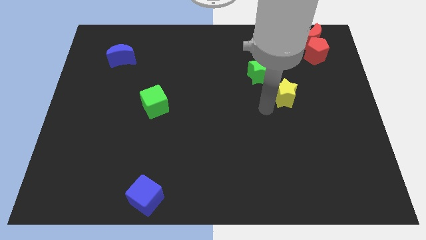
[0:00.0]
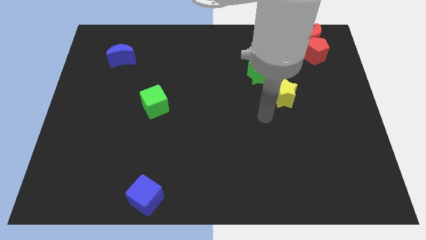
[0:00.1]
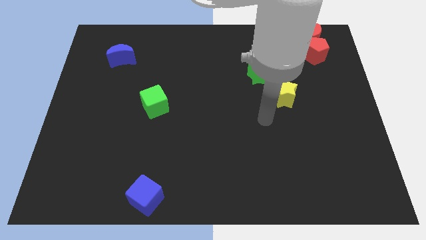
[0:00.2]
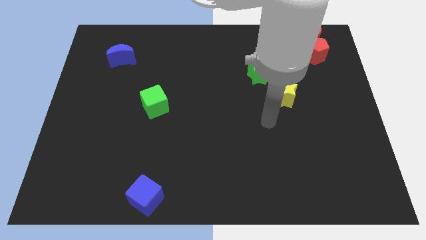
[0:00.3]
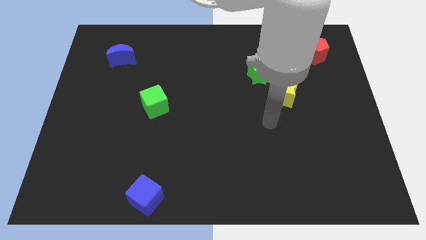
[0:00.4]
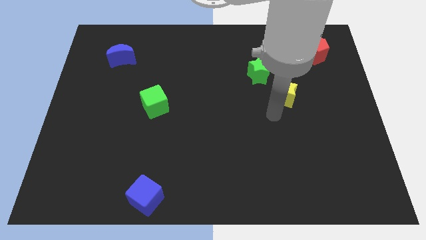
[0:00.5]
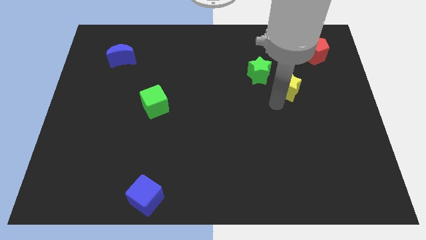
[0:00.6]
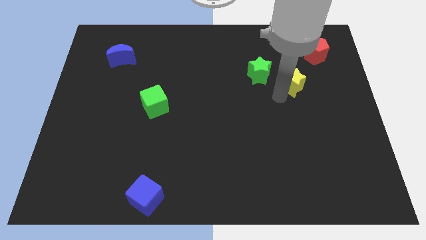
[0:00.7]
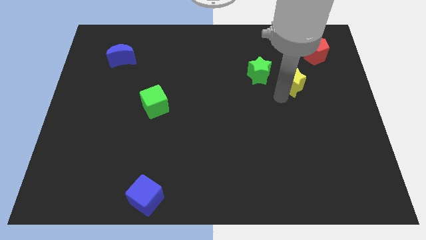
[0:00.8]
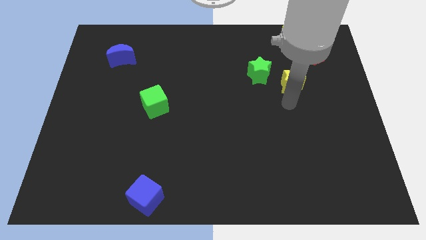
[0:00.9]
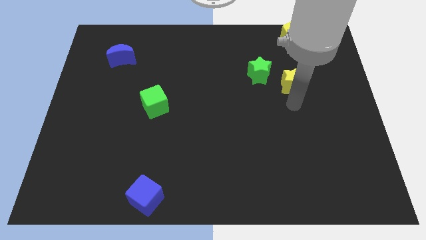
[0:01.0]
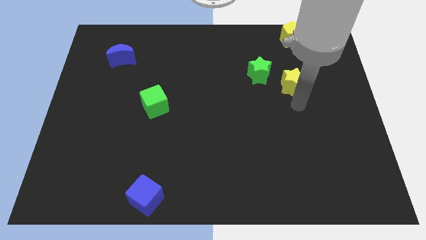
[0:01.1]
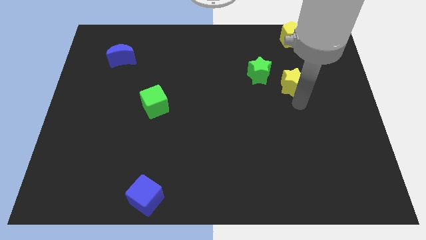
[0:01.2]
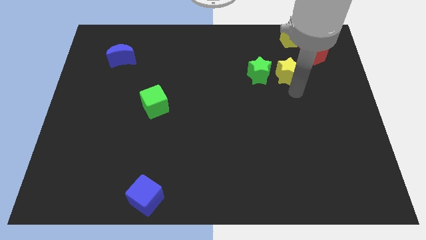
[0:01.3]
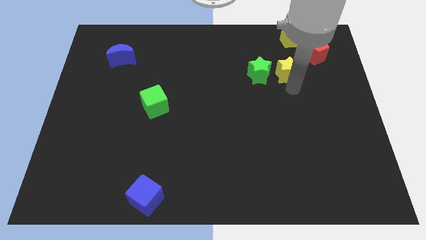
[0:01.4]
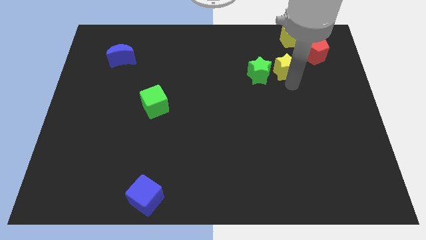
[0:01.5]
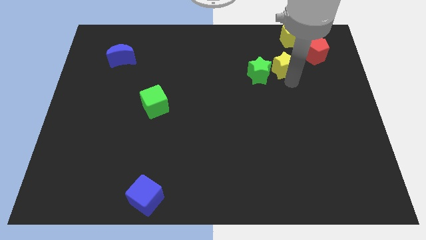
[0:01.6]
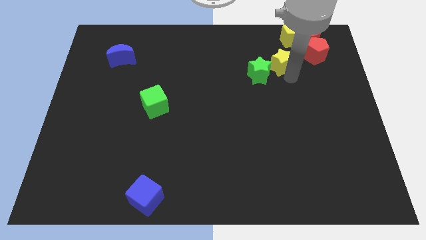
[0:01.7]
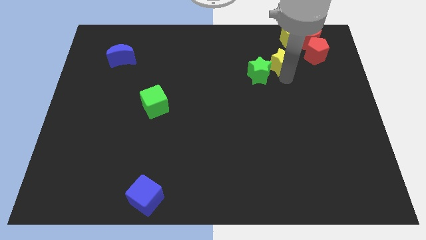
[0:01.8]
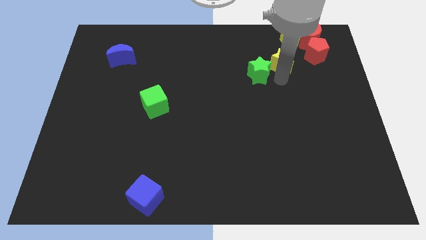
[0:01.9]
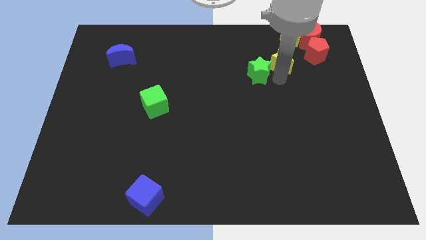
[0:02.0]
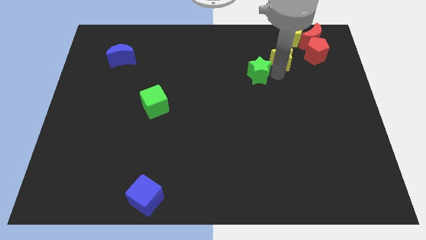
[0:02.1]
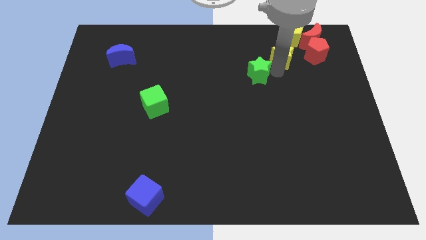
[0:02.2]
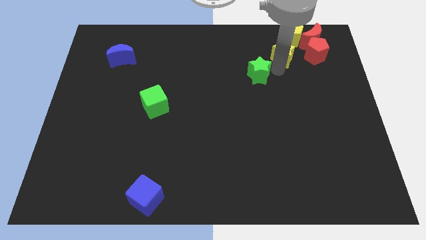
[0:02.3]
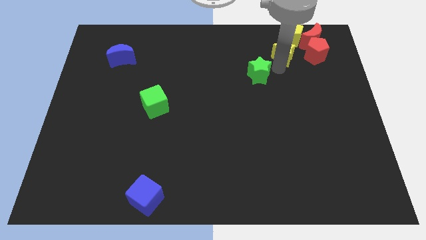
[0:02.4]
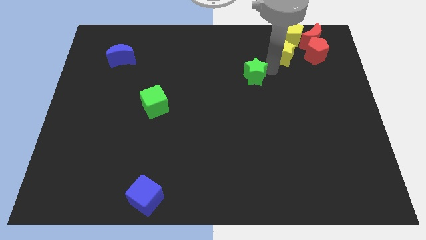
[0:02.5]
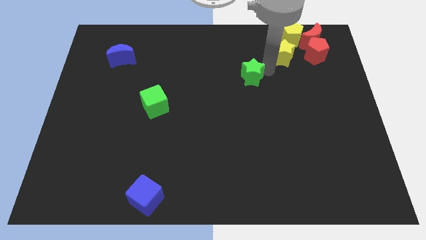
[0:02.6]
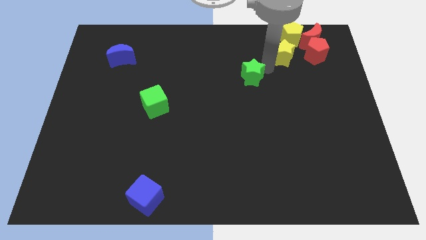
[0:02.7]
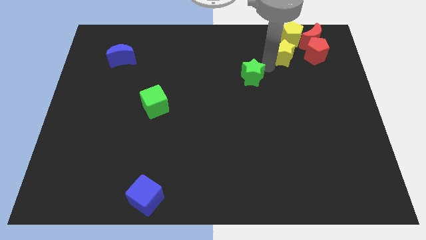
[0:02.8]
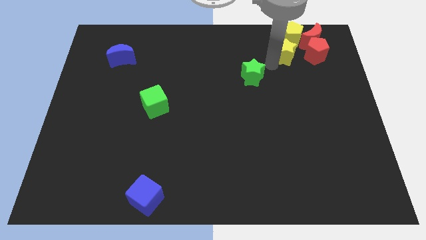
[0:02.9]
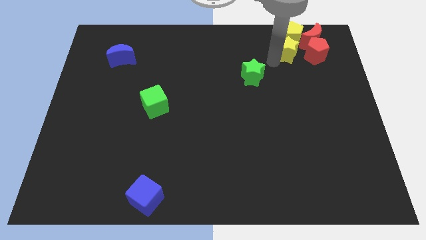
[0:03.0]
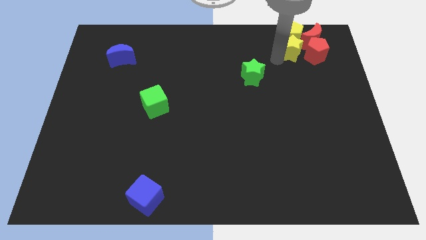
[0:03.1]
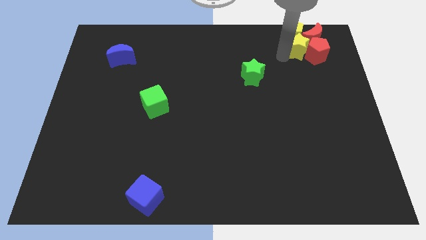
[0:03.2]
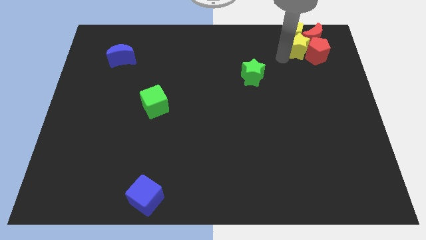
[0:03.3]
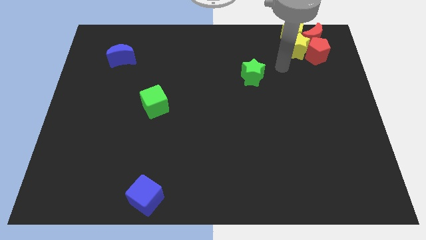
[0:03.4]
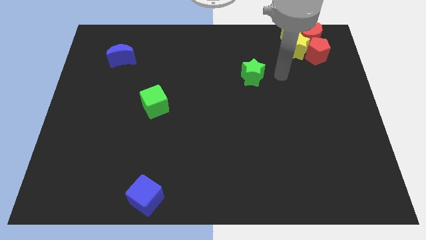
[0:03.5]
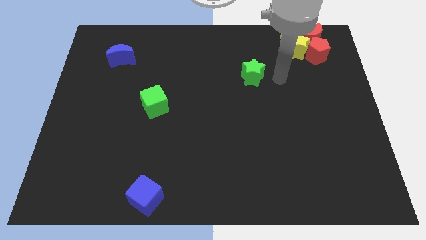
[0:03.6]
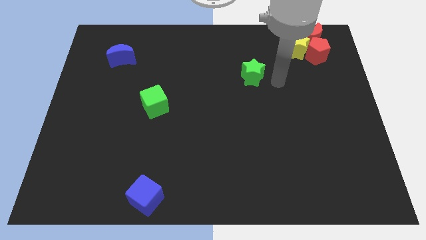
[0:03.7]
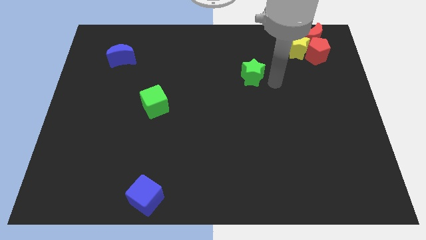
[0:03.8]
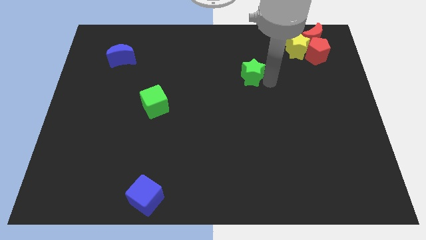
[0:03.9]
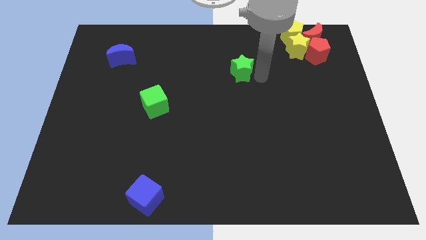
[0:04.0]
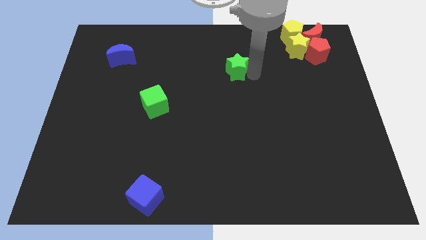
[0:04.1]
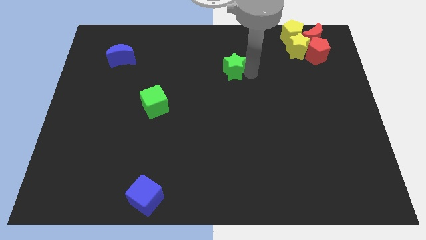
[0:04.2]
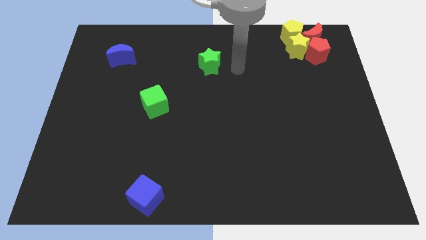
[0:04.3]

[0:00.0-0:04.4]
move green star to the center top

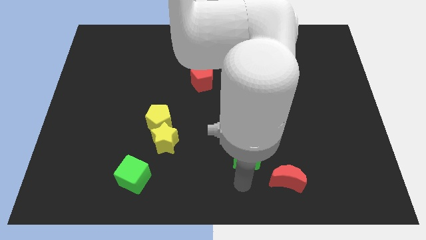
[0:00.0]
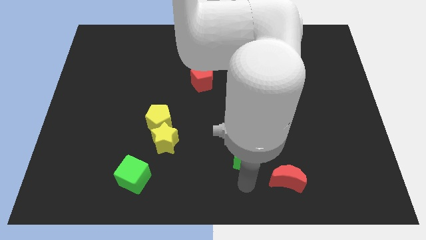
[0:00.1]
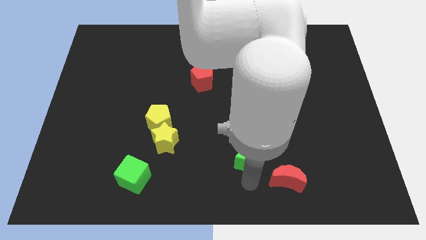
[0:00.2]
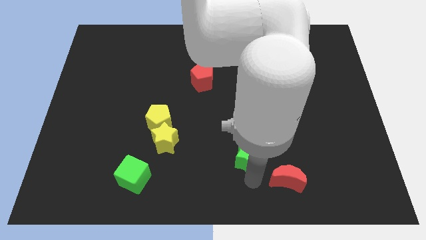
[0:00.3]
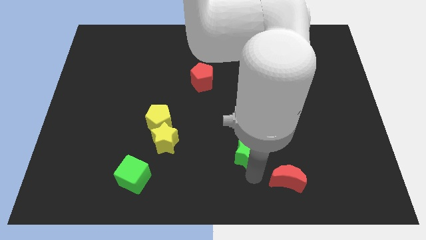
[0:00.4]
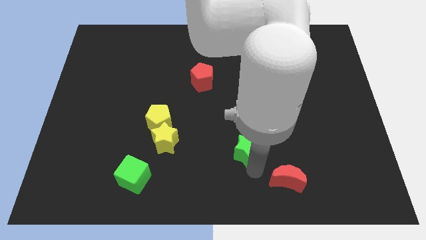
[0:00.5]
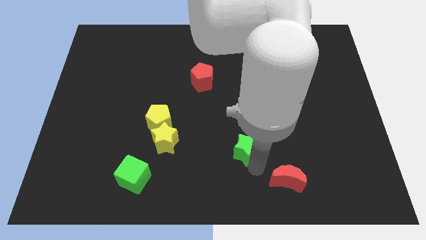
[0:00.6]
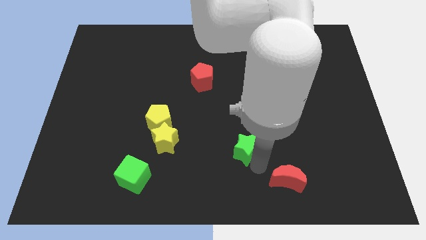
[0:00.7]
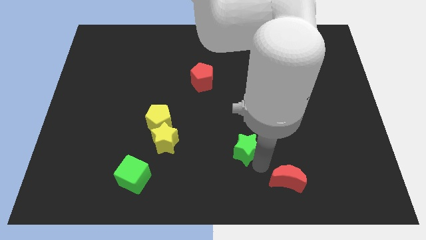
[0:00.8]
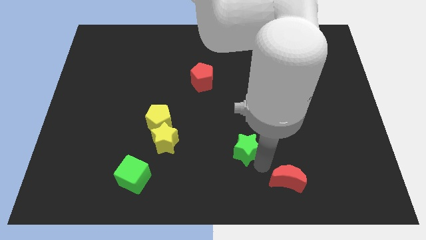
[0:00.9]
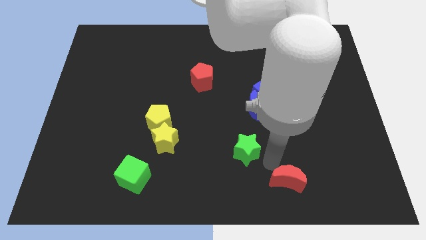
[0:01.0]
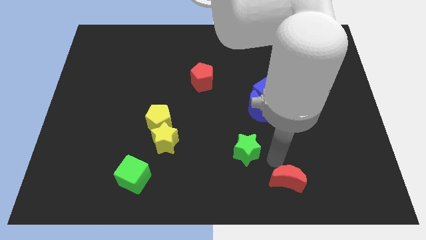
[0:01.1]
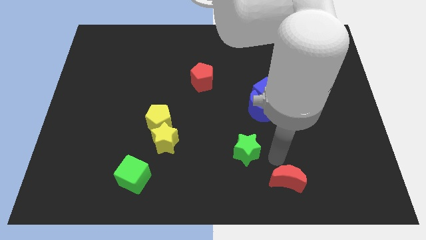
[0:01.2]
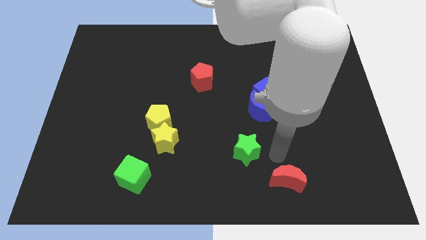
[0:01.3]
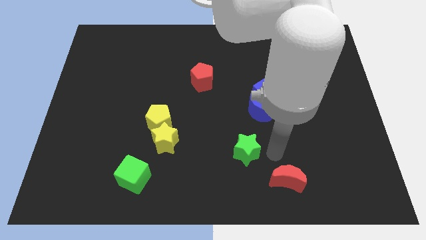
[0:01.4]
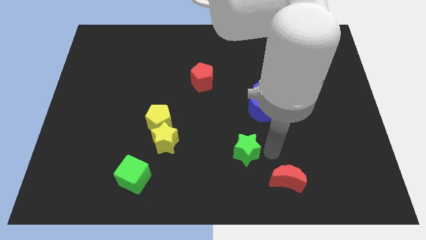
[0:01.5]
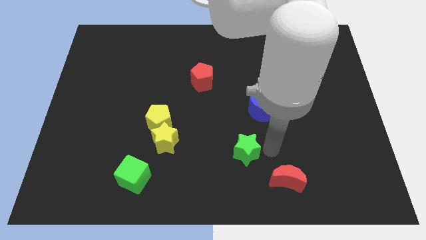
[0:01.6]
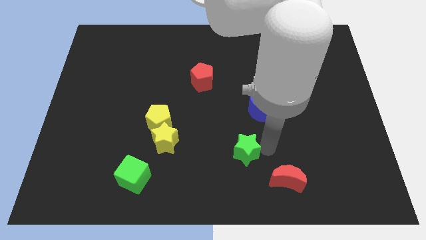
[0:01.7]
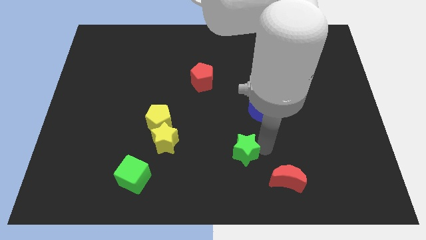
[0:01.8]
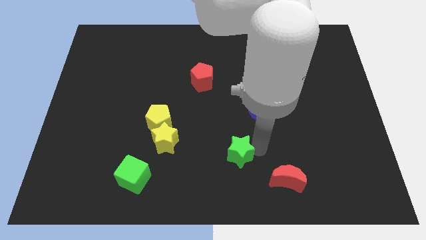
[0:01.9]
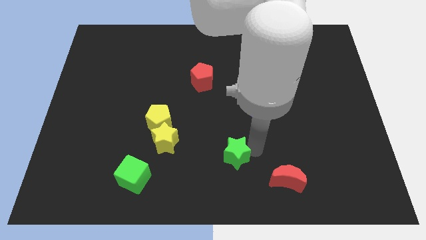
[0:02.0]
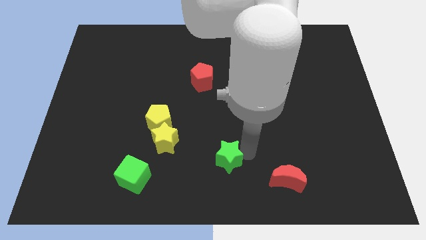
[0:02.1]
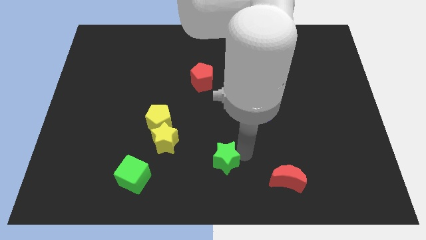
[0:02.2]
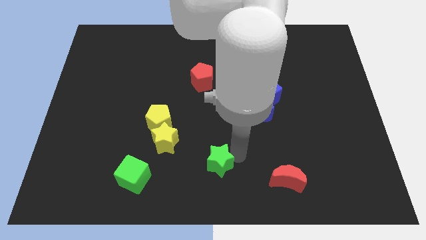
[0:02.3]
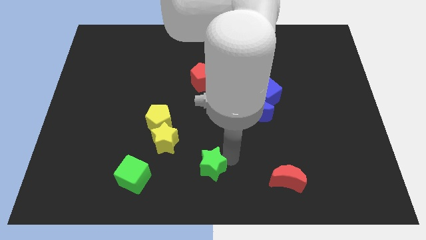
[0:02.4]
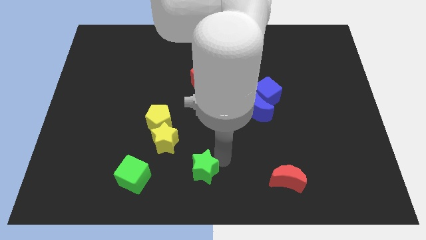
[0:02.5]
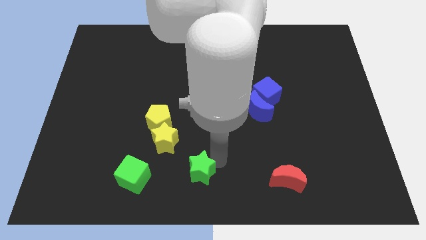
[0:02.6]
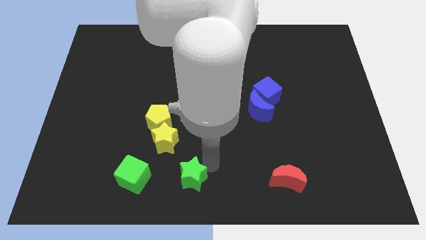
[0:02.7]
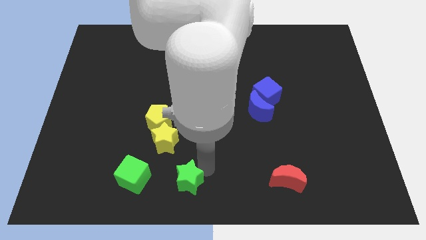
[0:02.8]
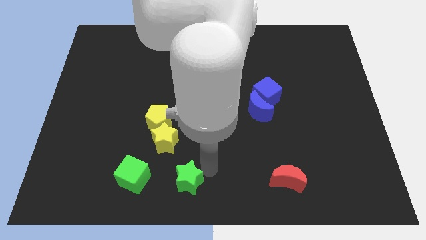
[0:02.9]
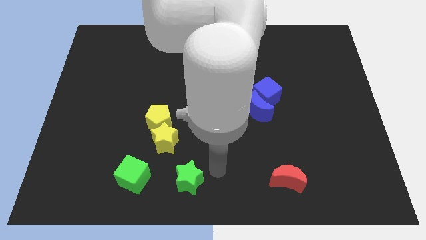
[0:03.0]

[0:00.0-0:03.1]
move the green star parallel to the green cube

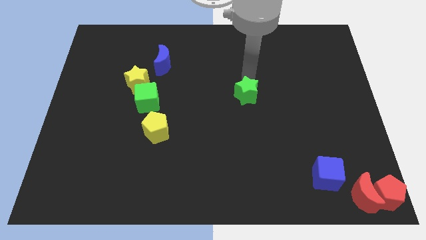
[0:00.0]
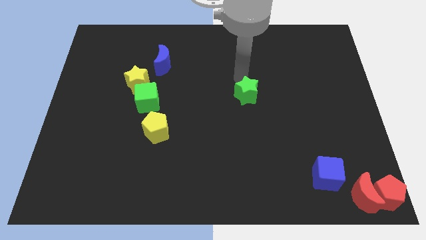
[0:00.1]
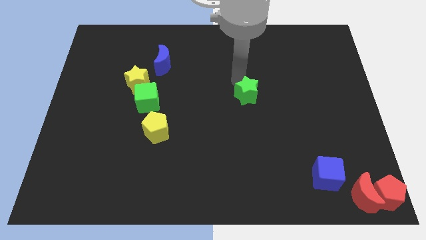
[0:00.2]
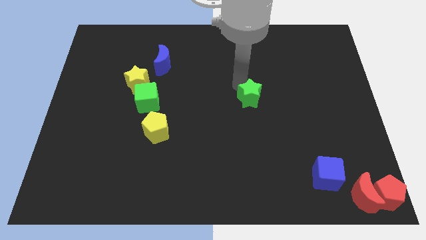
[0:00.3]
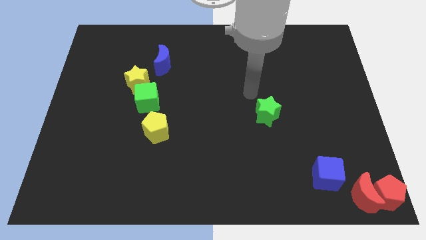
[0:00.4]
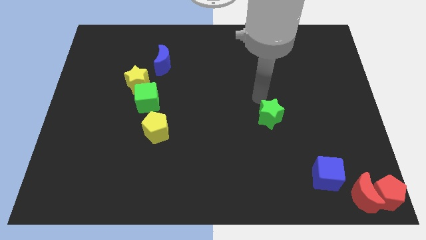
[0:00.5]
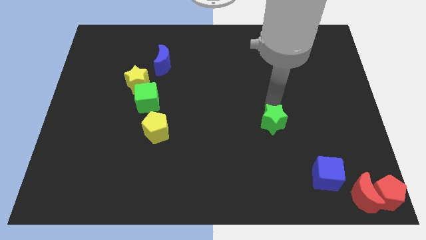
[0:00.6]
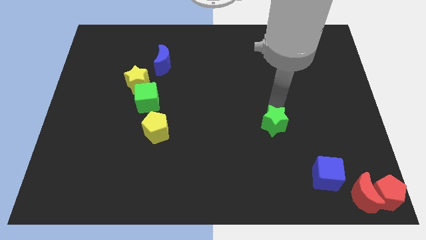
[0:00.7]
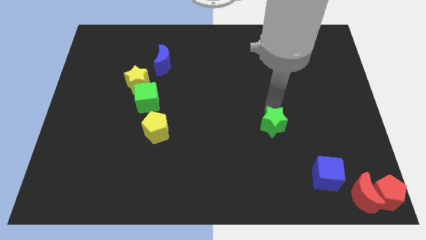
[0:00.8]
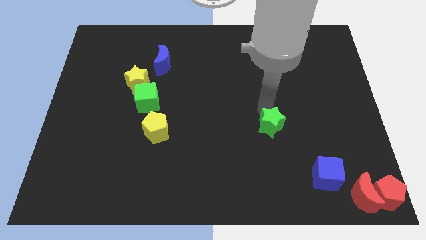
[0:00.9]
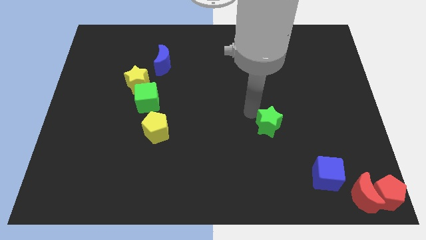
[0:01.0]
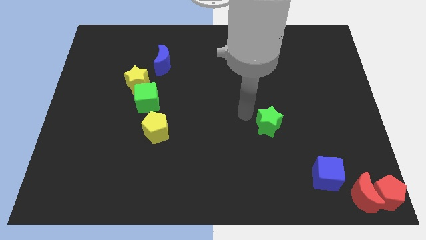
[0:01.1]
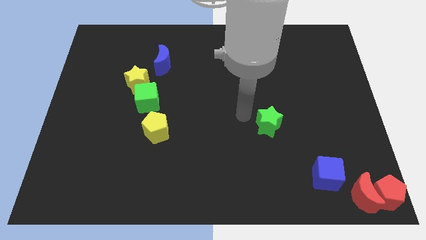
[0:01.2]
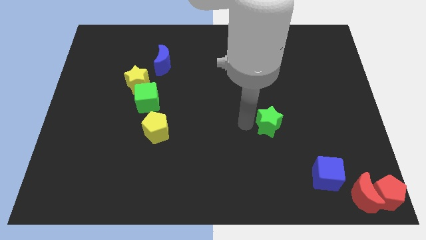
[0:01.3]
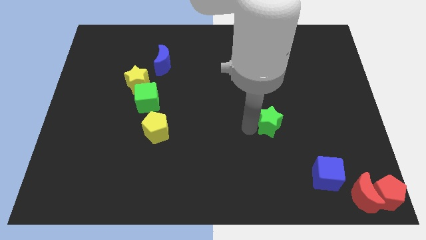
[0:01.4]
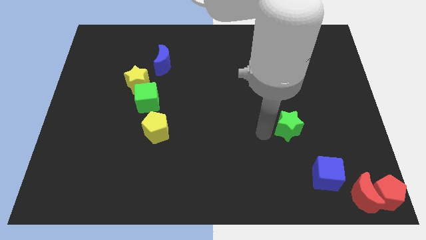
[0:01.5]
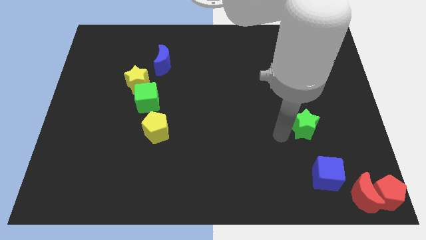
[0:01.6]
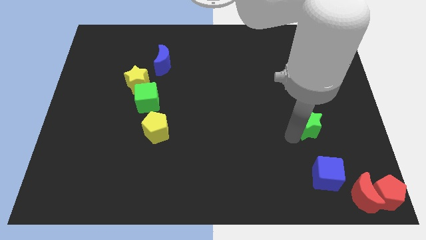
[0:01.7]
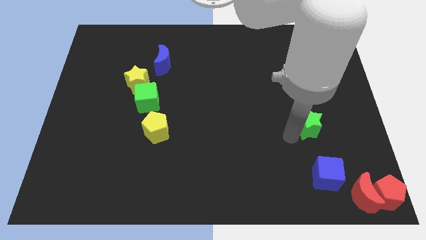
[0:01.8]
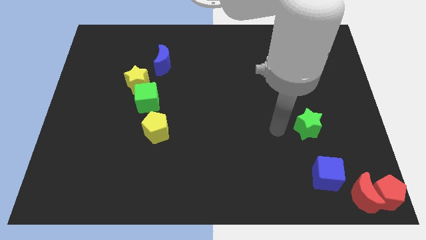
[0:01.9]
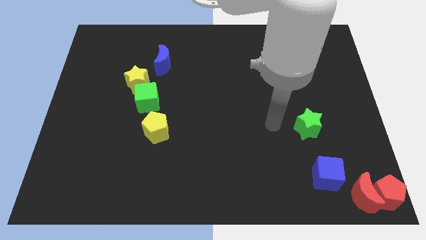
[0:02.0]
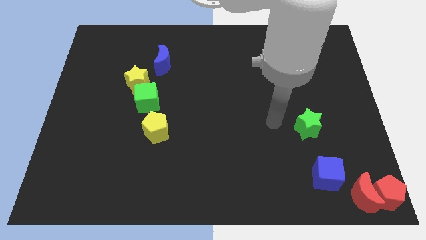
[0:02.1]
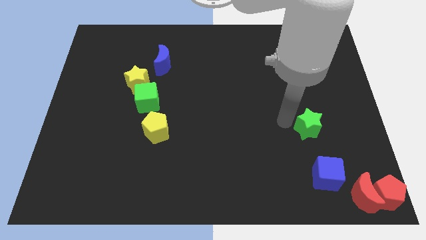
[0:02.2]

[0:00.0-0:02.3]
push green star towards center right
